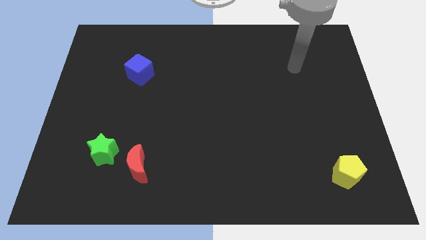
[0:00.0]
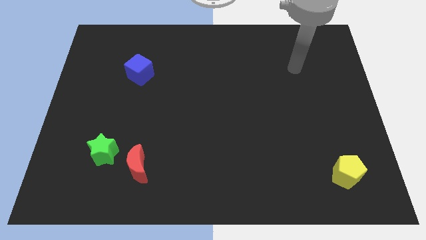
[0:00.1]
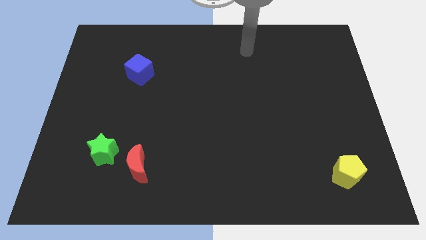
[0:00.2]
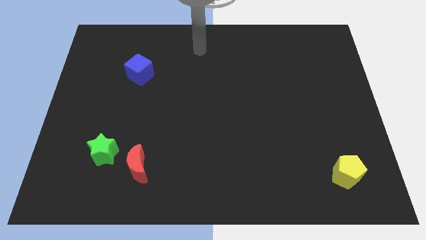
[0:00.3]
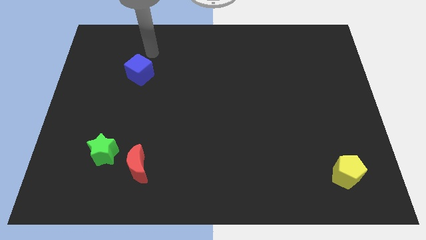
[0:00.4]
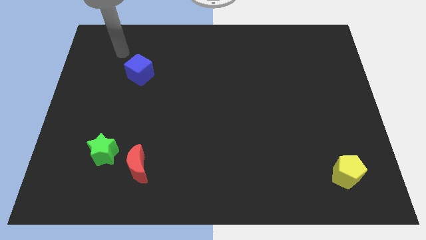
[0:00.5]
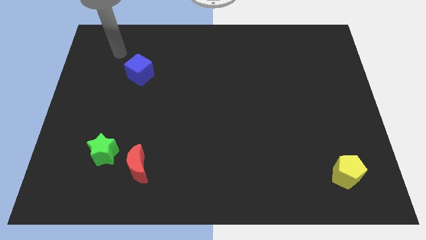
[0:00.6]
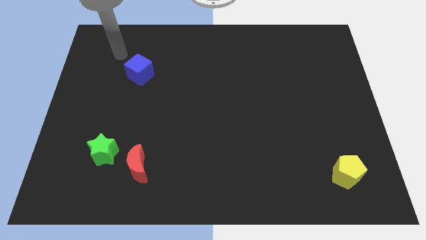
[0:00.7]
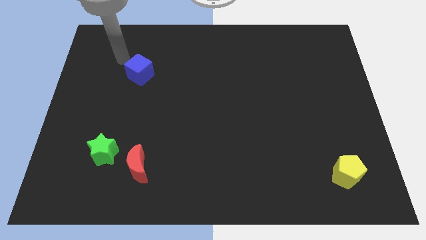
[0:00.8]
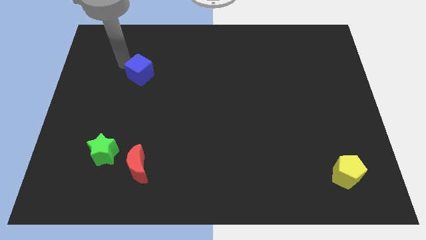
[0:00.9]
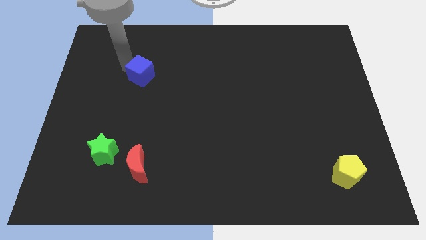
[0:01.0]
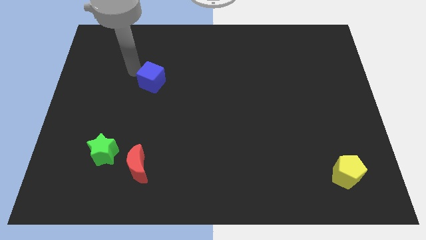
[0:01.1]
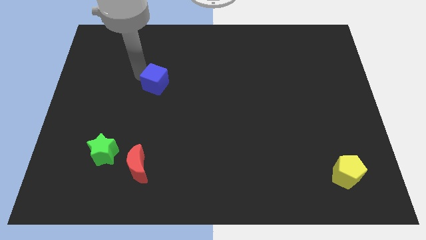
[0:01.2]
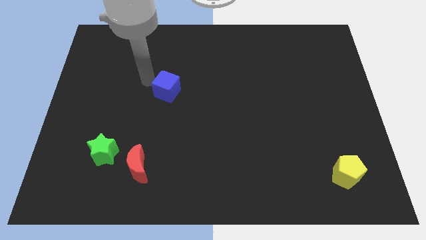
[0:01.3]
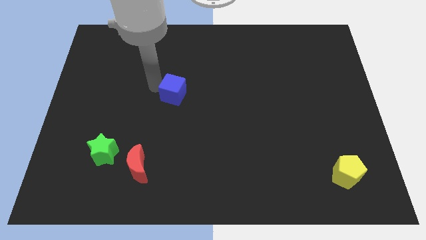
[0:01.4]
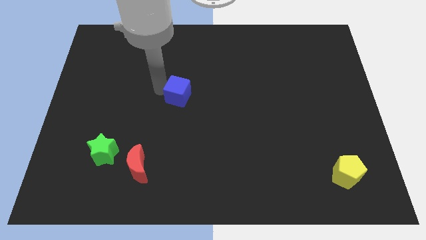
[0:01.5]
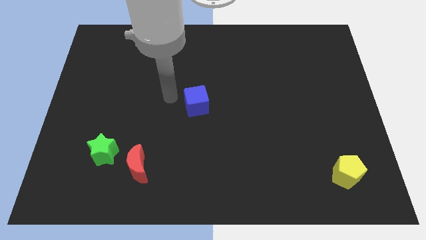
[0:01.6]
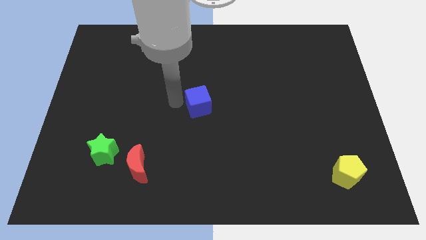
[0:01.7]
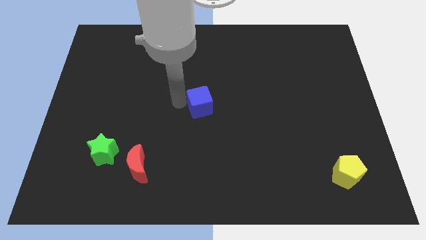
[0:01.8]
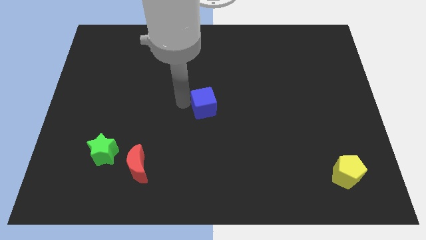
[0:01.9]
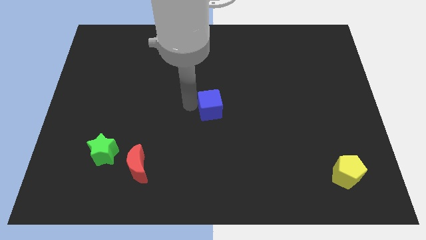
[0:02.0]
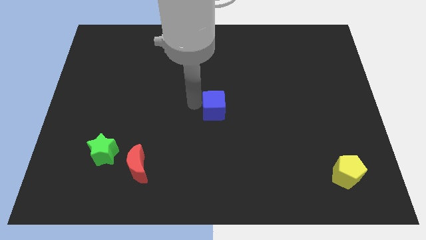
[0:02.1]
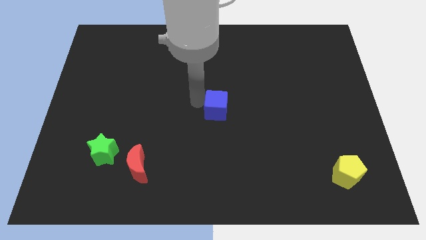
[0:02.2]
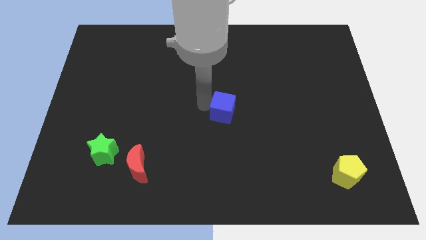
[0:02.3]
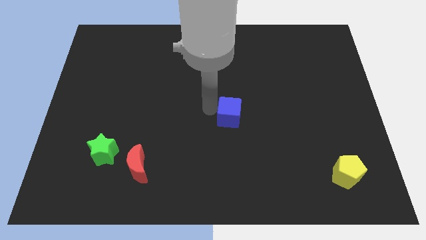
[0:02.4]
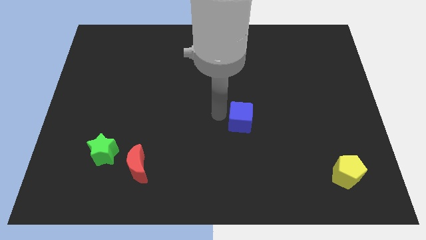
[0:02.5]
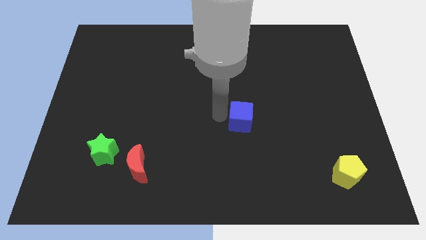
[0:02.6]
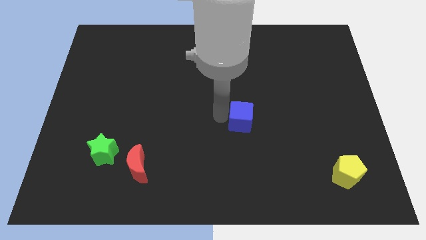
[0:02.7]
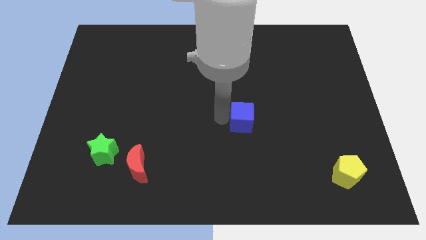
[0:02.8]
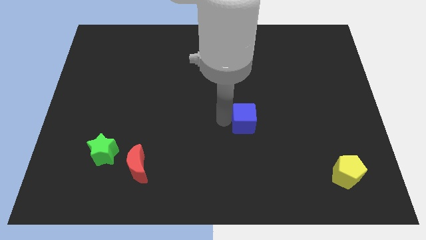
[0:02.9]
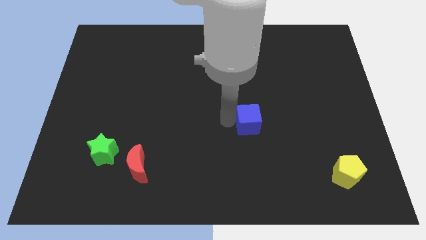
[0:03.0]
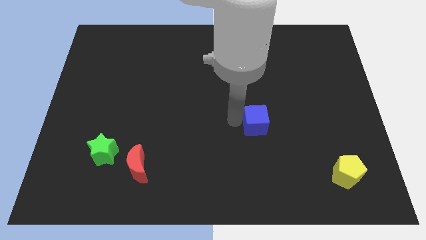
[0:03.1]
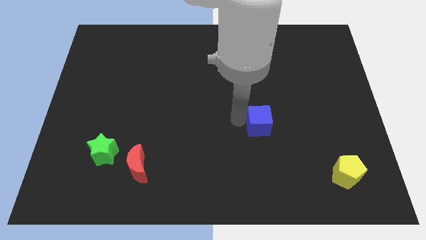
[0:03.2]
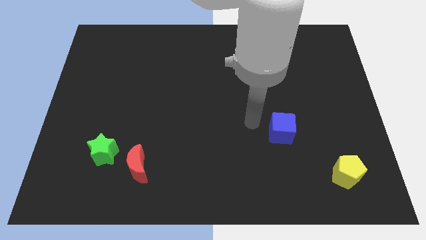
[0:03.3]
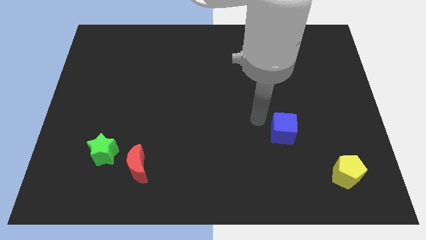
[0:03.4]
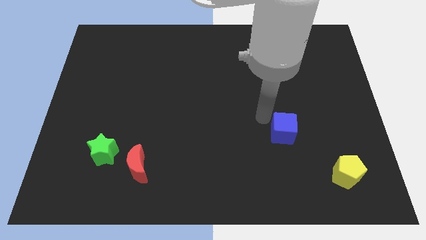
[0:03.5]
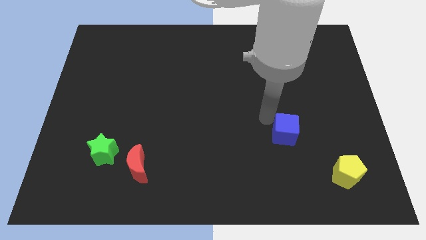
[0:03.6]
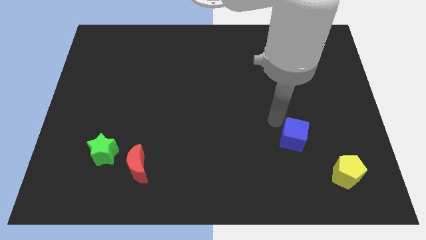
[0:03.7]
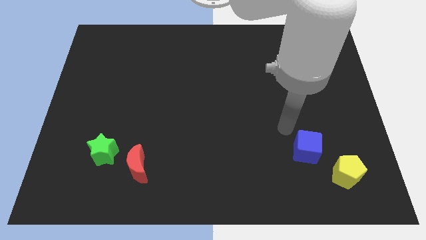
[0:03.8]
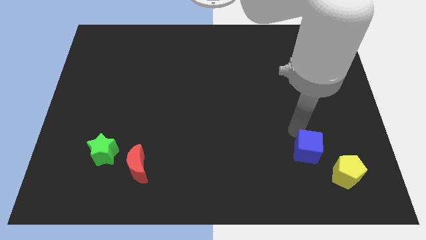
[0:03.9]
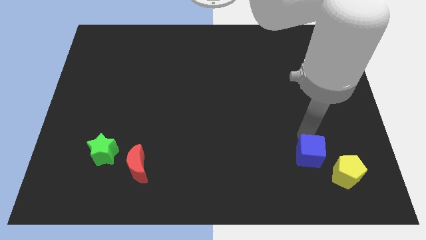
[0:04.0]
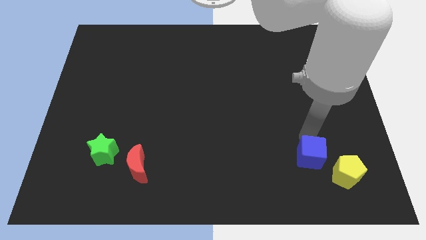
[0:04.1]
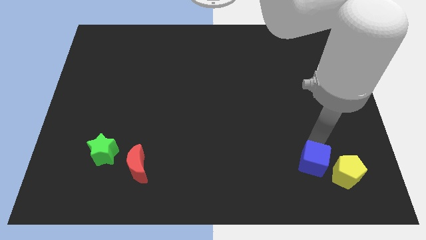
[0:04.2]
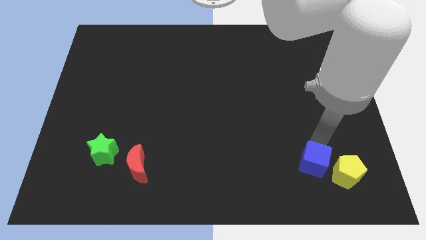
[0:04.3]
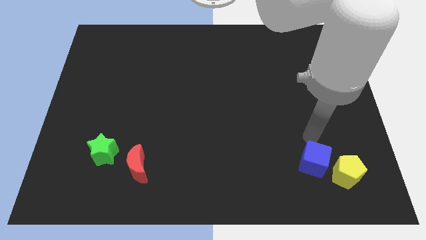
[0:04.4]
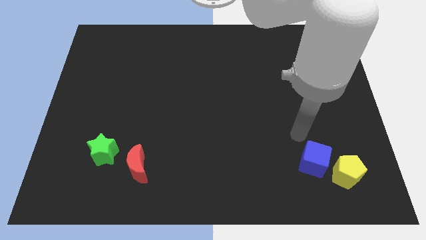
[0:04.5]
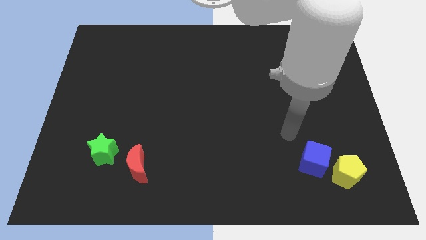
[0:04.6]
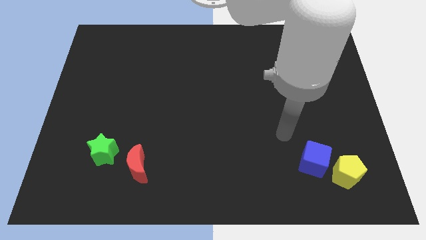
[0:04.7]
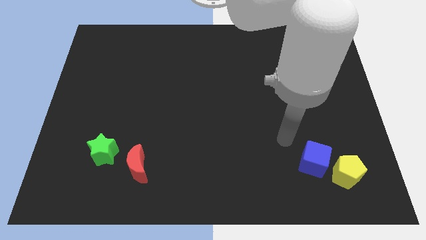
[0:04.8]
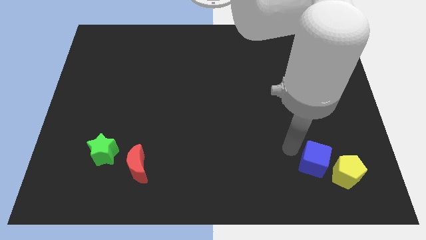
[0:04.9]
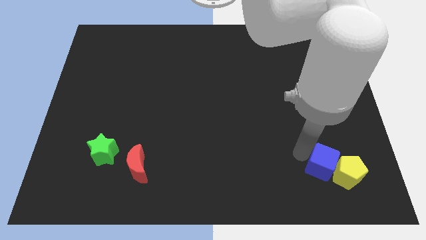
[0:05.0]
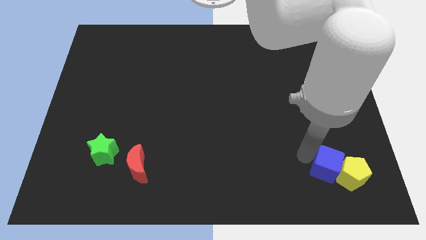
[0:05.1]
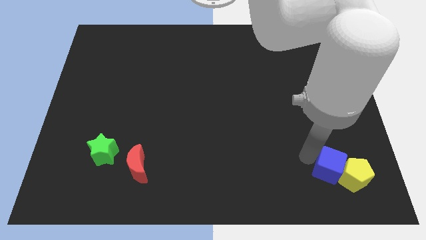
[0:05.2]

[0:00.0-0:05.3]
put the cube towards the yellow block

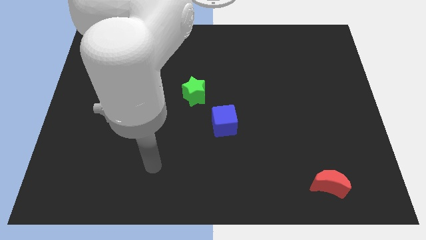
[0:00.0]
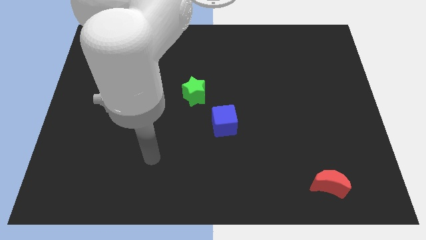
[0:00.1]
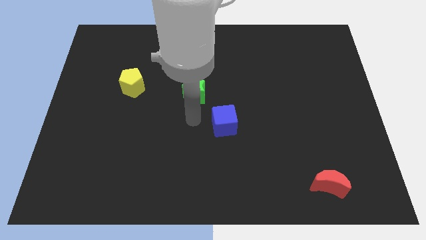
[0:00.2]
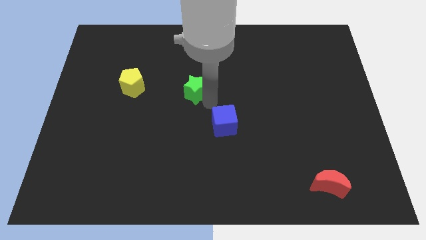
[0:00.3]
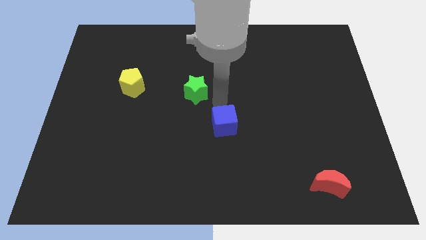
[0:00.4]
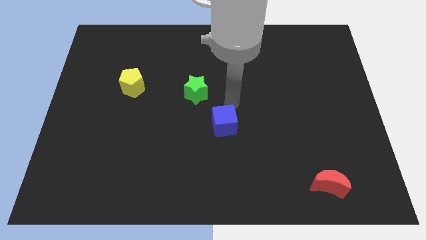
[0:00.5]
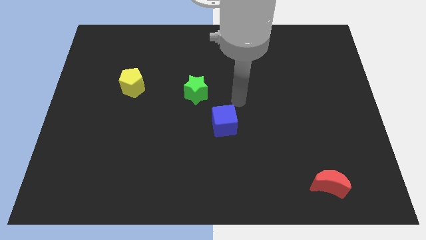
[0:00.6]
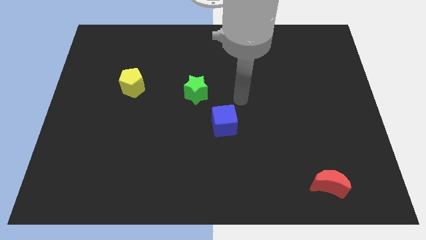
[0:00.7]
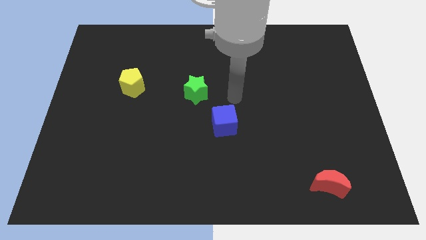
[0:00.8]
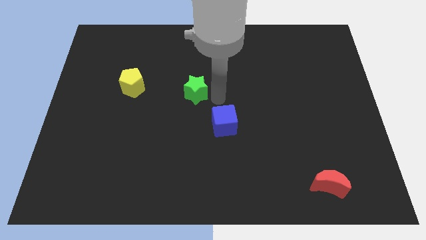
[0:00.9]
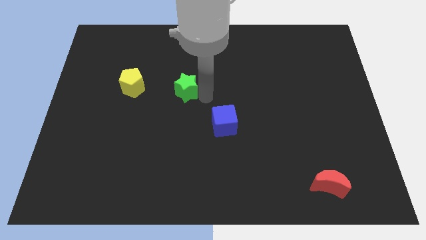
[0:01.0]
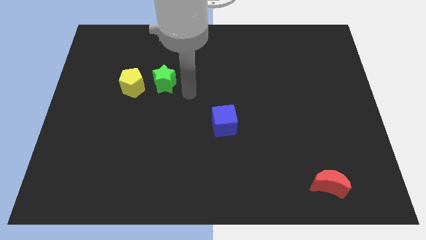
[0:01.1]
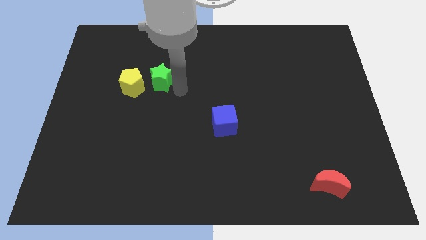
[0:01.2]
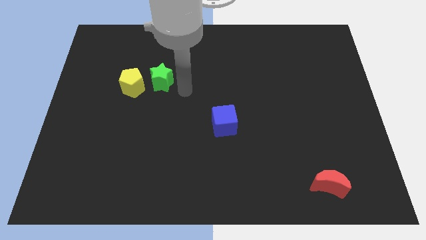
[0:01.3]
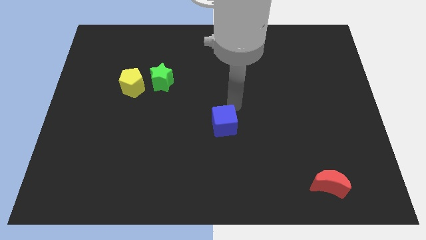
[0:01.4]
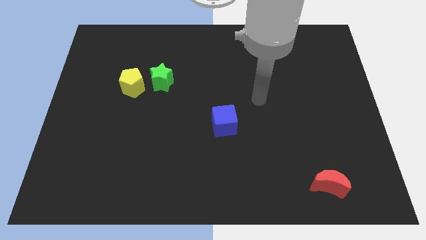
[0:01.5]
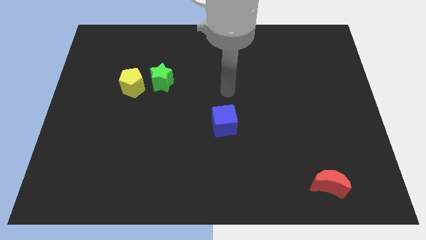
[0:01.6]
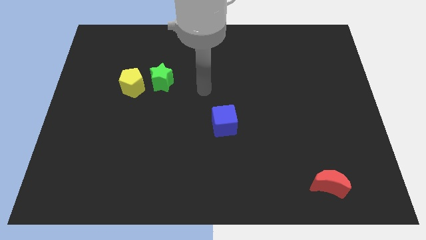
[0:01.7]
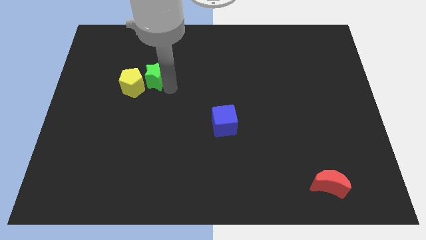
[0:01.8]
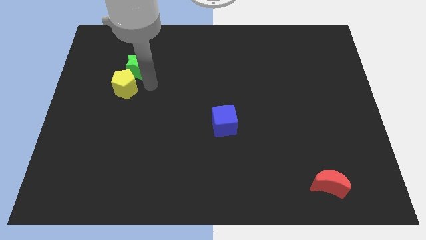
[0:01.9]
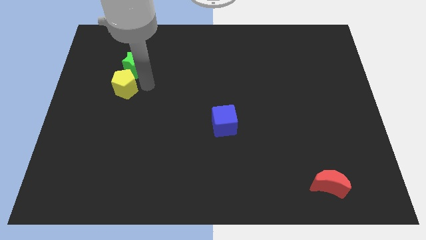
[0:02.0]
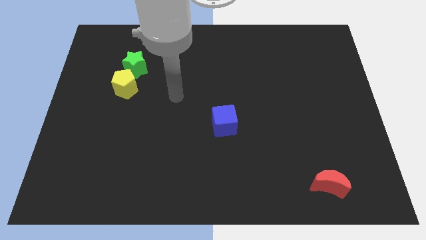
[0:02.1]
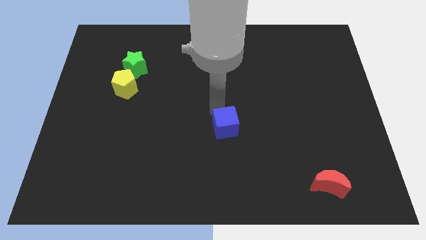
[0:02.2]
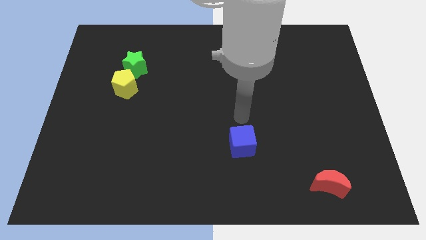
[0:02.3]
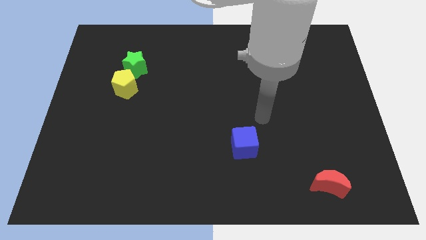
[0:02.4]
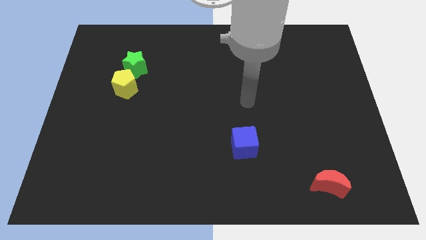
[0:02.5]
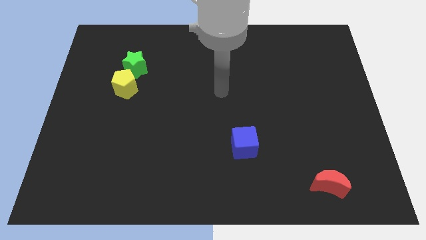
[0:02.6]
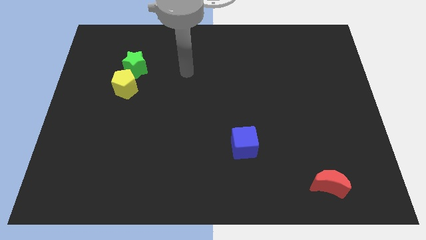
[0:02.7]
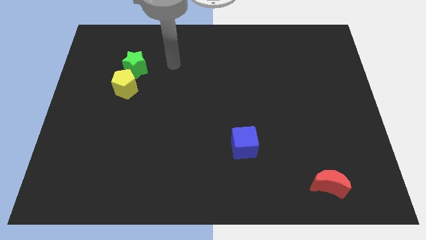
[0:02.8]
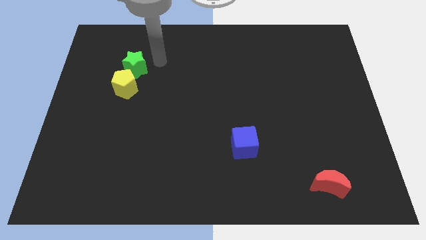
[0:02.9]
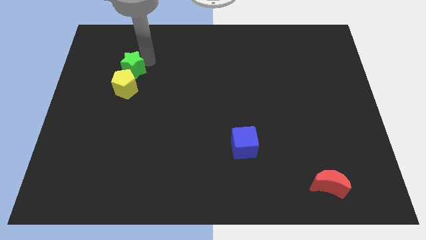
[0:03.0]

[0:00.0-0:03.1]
push the star to the yellow pentagon

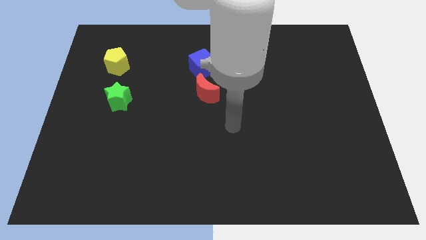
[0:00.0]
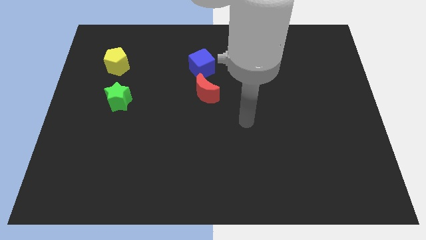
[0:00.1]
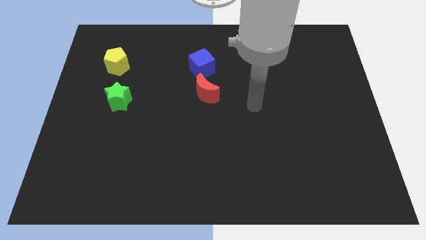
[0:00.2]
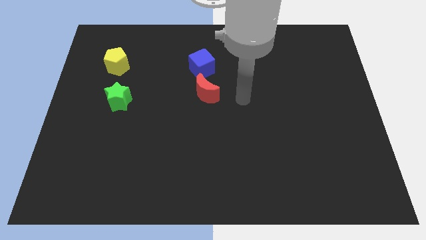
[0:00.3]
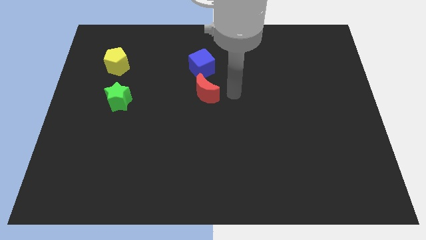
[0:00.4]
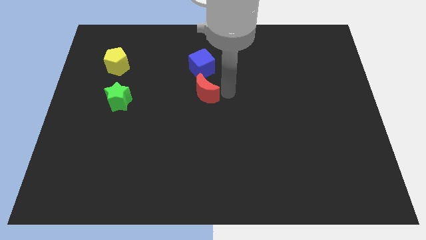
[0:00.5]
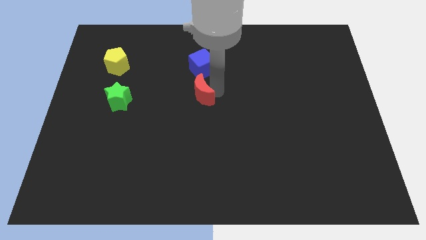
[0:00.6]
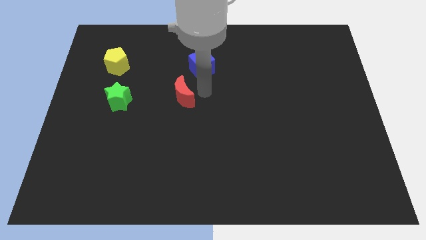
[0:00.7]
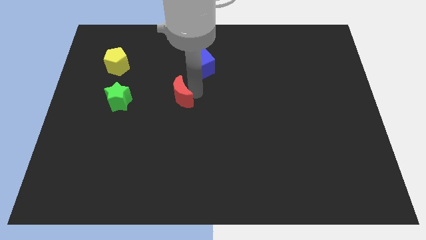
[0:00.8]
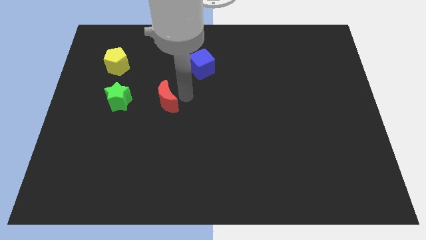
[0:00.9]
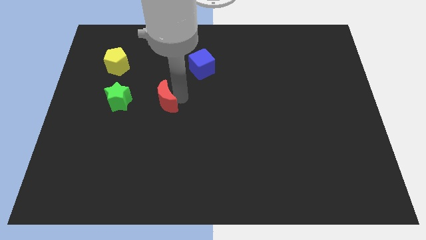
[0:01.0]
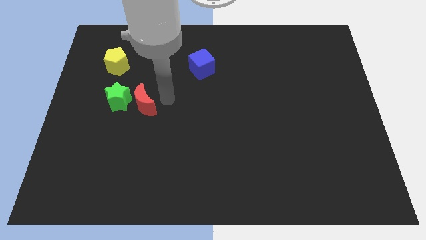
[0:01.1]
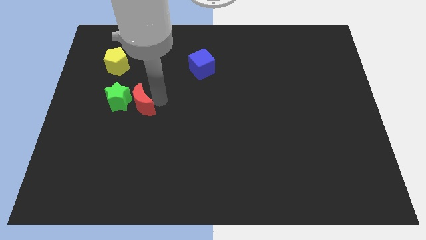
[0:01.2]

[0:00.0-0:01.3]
push the red block next to the green block
